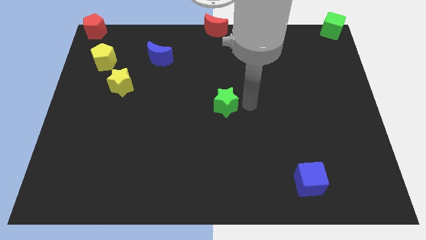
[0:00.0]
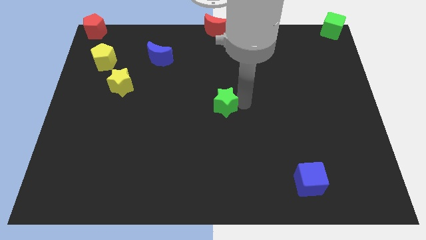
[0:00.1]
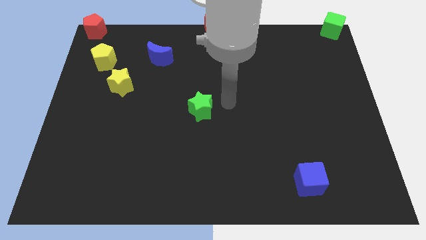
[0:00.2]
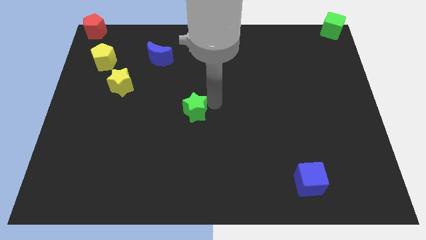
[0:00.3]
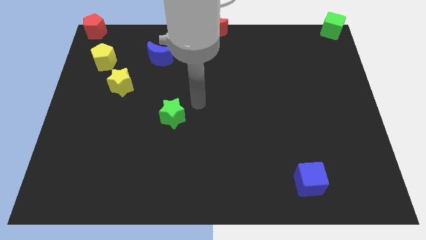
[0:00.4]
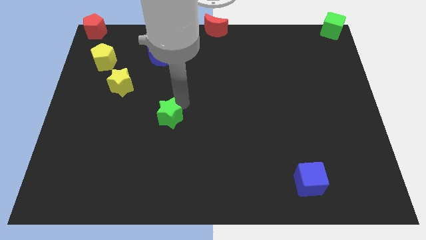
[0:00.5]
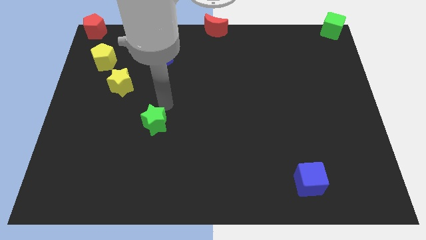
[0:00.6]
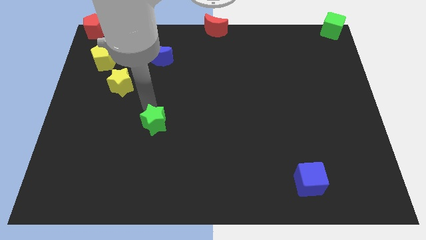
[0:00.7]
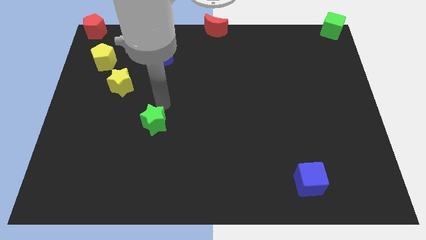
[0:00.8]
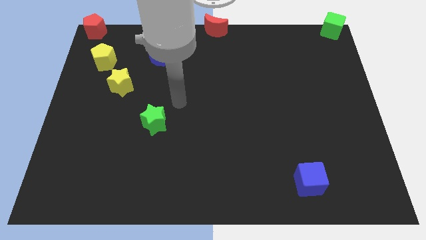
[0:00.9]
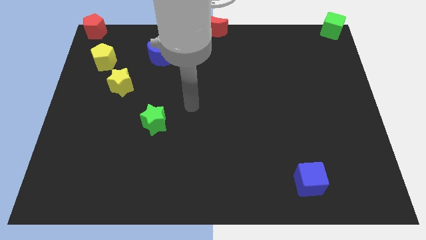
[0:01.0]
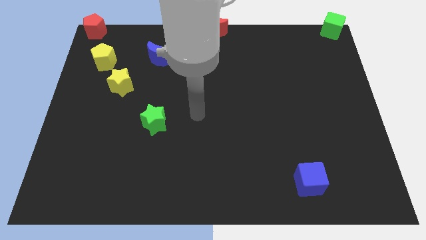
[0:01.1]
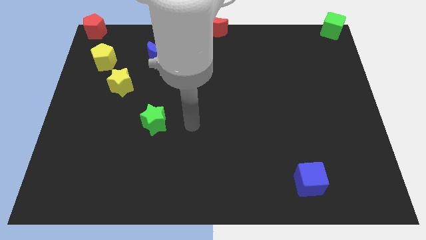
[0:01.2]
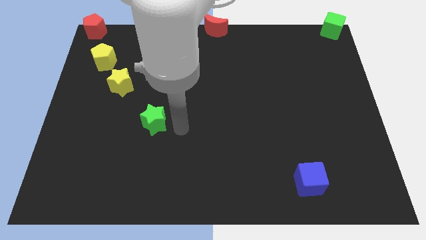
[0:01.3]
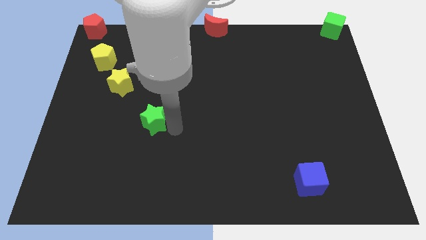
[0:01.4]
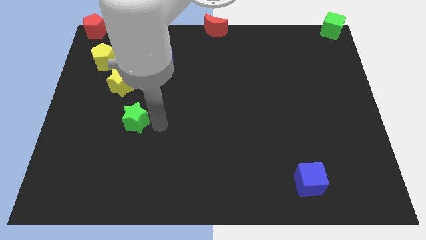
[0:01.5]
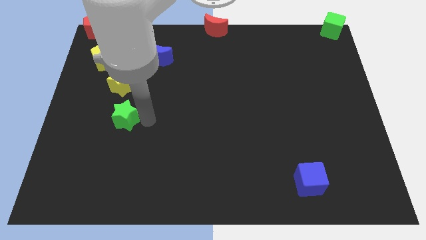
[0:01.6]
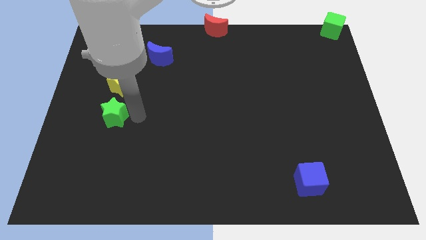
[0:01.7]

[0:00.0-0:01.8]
push the green star to the bottom of the yellow star

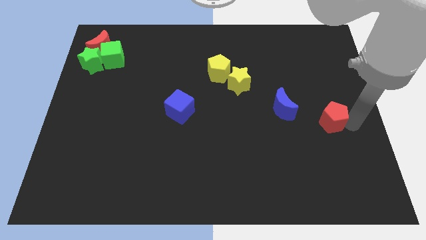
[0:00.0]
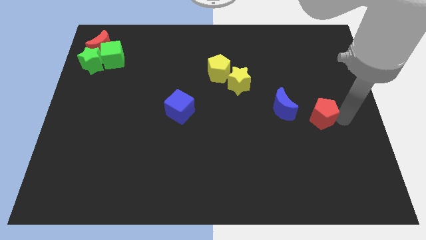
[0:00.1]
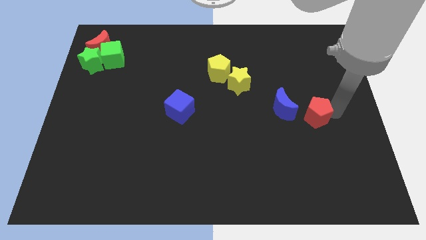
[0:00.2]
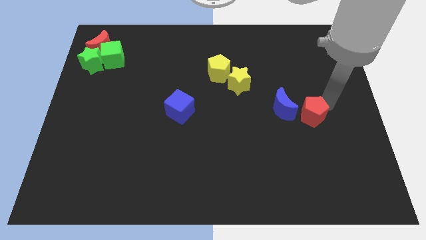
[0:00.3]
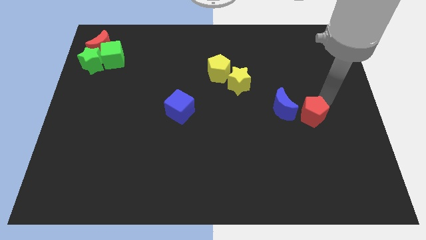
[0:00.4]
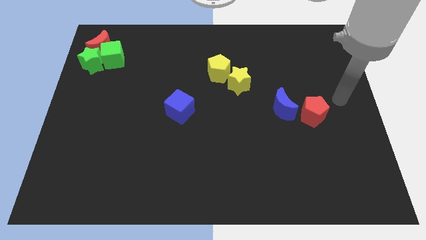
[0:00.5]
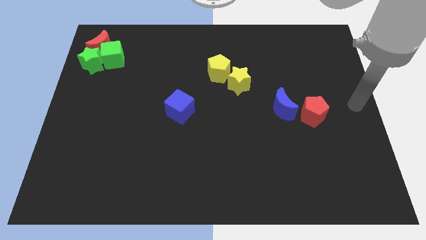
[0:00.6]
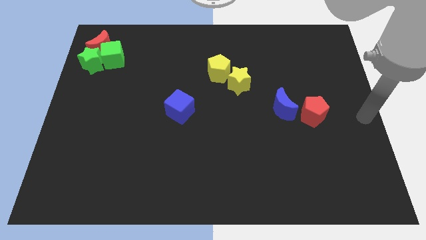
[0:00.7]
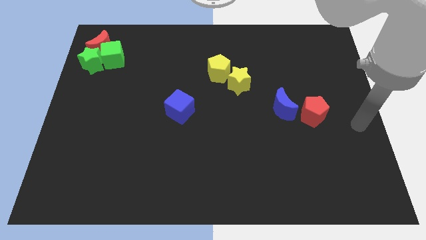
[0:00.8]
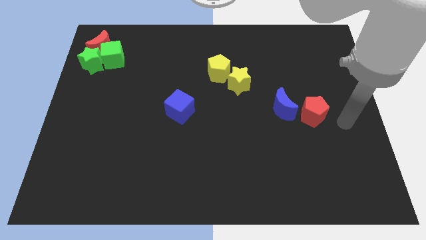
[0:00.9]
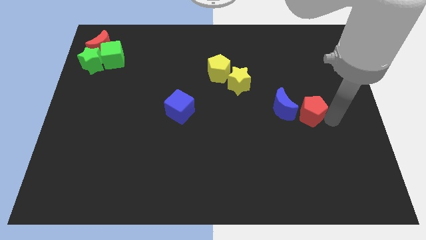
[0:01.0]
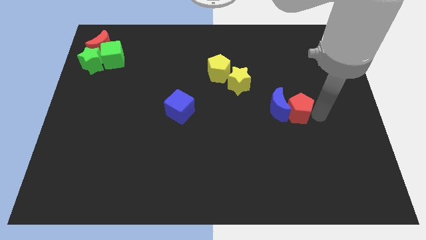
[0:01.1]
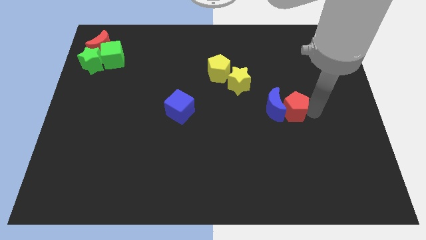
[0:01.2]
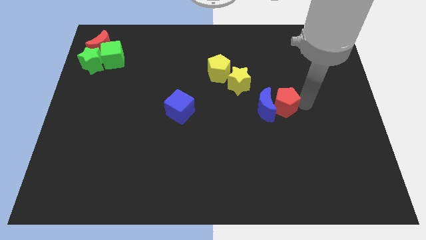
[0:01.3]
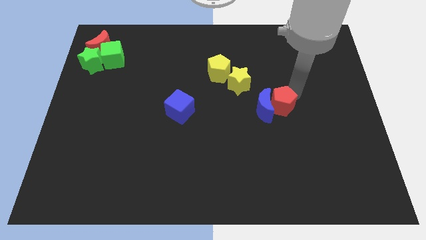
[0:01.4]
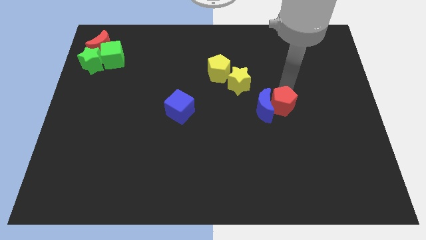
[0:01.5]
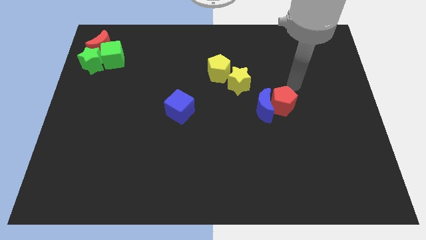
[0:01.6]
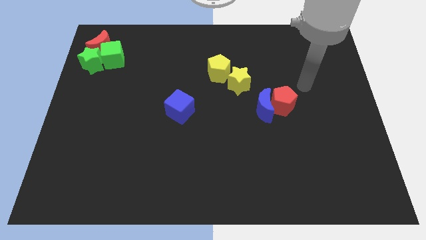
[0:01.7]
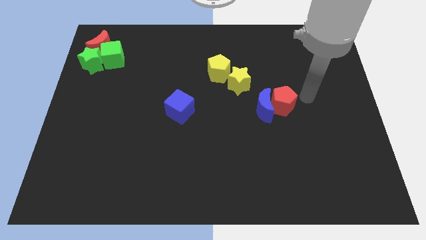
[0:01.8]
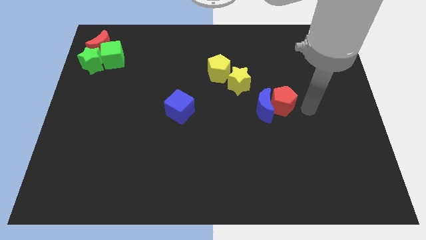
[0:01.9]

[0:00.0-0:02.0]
push red pentagon into the blue moon

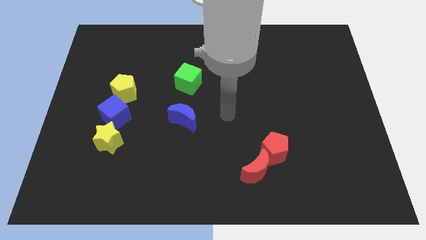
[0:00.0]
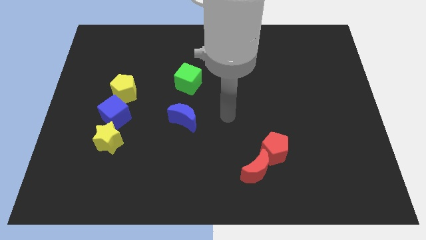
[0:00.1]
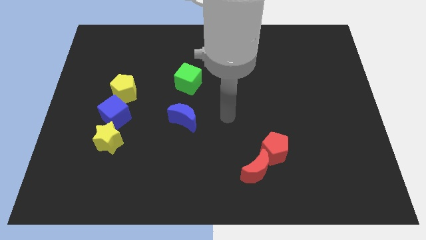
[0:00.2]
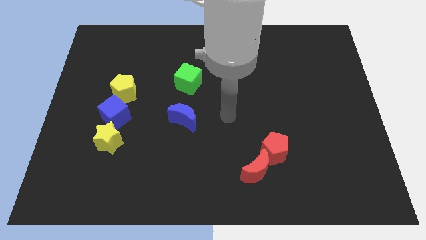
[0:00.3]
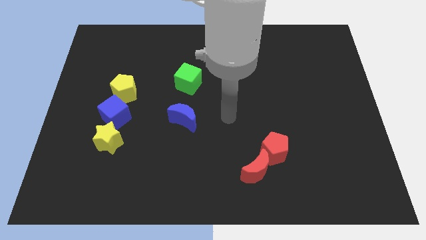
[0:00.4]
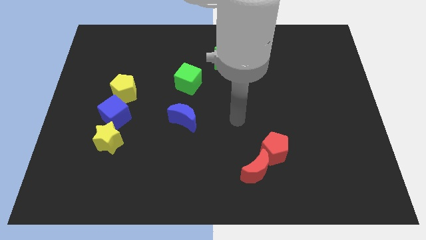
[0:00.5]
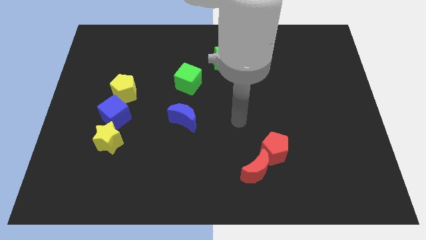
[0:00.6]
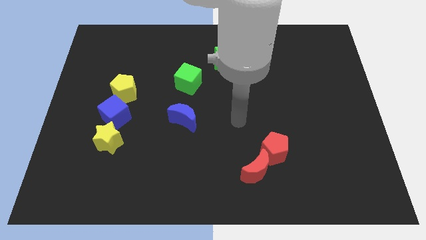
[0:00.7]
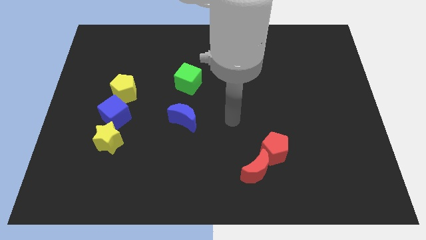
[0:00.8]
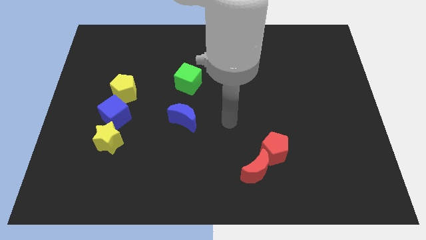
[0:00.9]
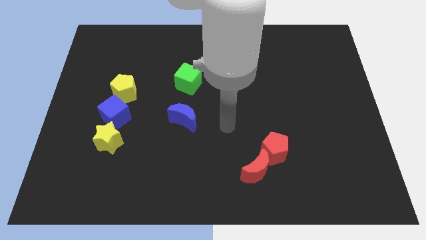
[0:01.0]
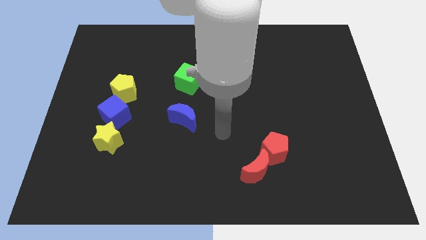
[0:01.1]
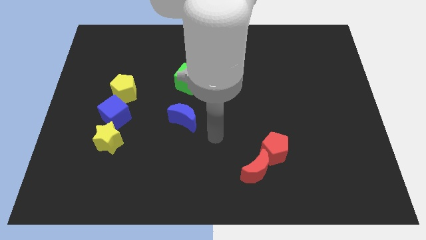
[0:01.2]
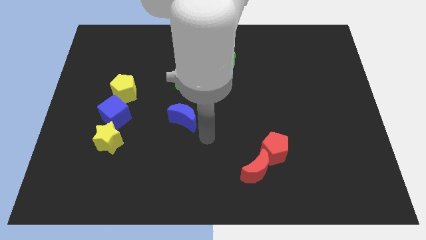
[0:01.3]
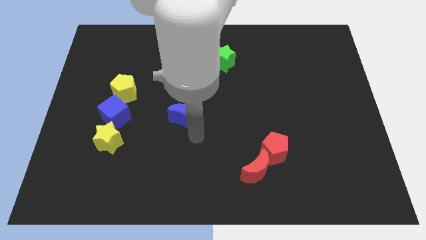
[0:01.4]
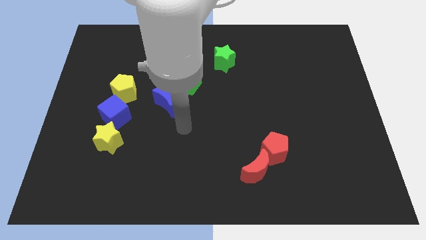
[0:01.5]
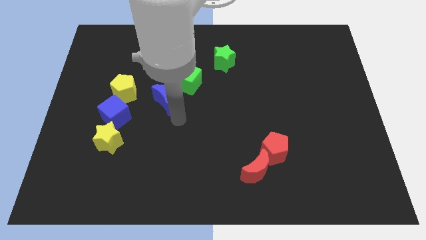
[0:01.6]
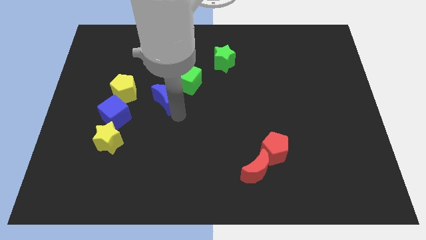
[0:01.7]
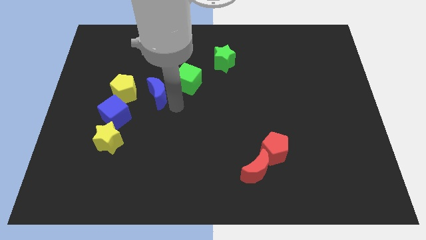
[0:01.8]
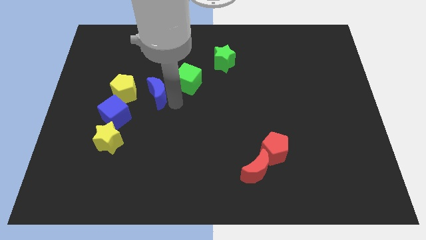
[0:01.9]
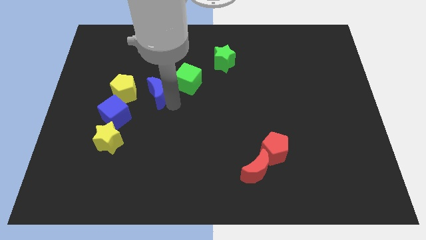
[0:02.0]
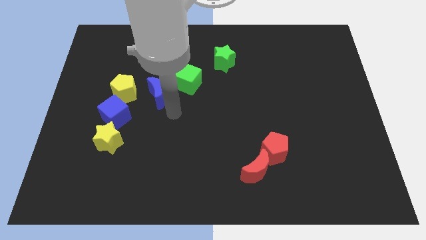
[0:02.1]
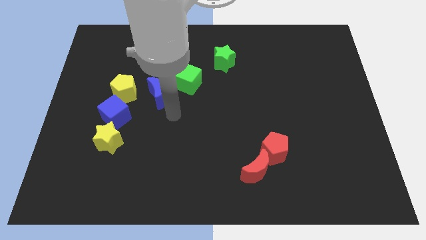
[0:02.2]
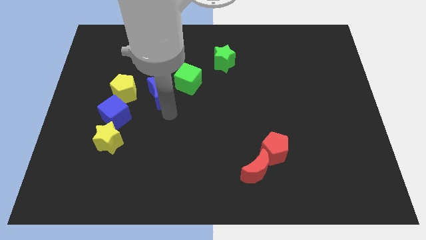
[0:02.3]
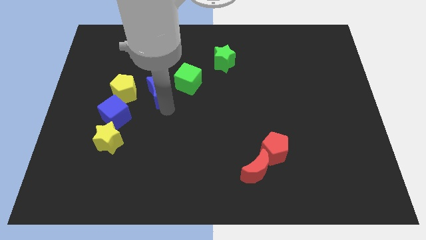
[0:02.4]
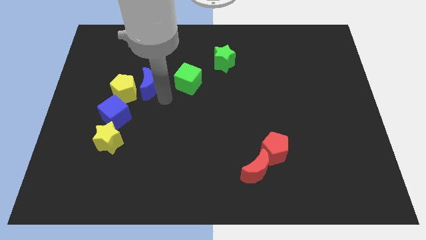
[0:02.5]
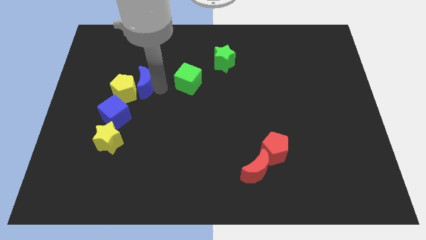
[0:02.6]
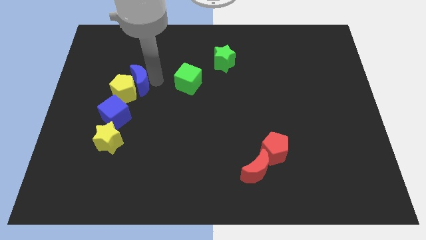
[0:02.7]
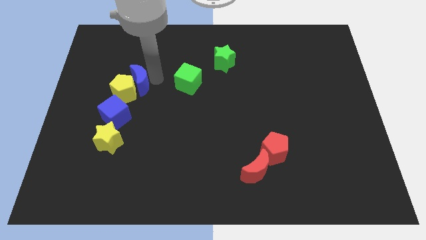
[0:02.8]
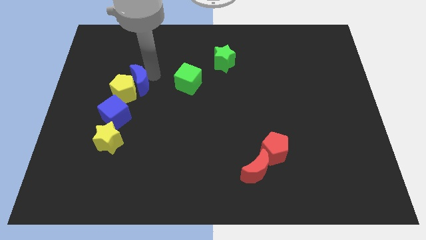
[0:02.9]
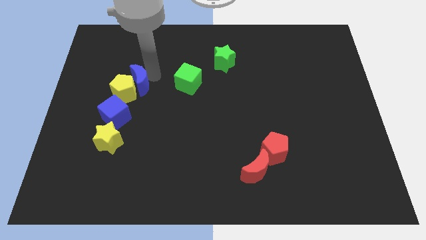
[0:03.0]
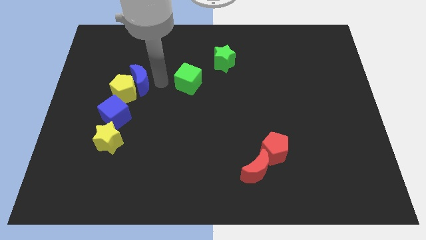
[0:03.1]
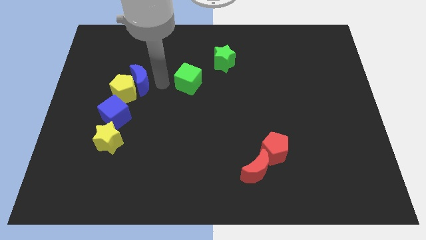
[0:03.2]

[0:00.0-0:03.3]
place the blue moon to the right of the yellow pentagon

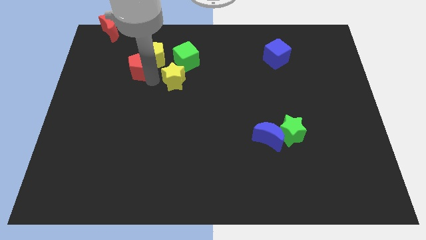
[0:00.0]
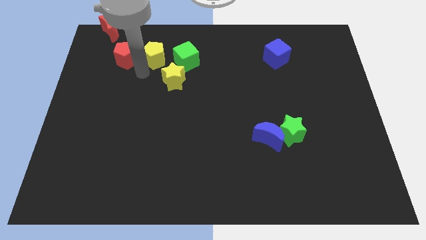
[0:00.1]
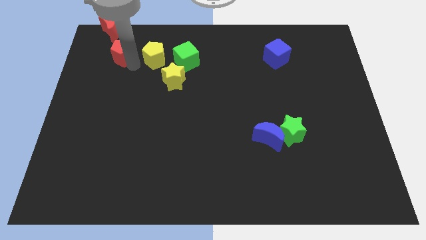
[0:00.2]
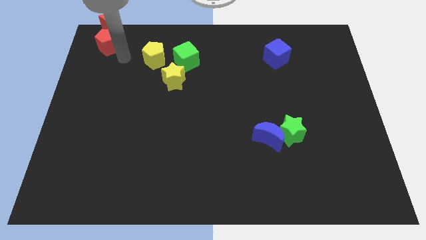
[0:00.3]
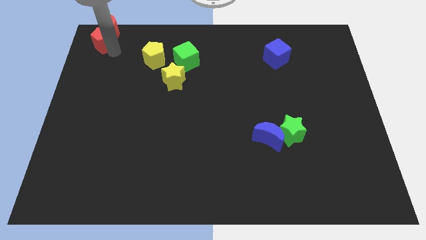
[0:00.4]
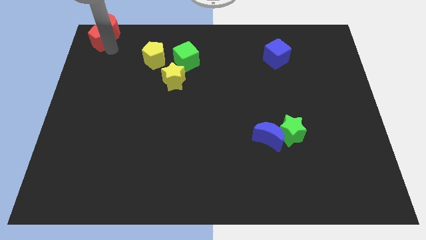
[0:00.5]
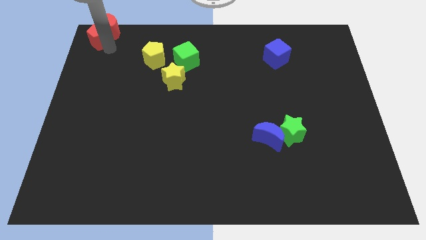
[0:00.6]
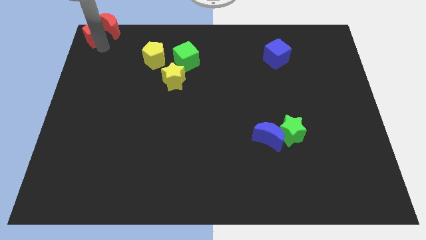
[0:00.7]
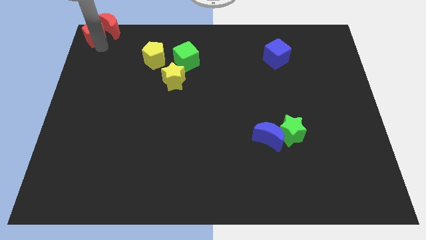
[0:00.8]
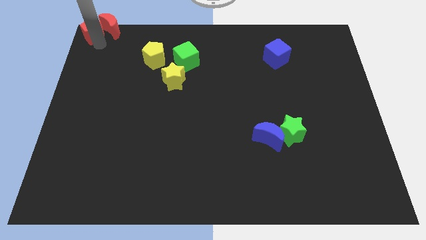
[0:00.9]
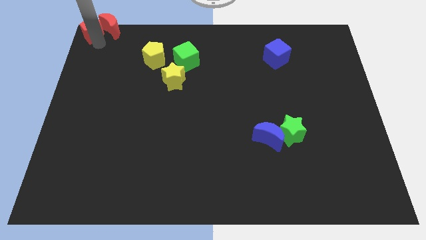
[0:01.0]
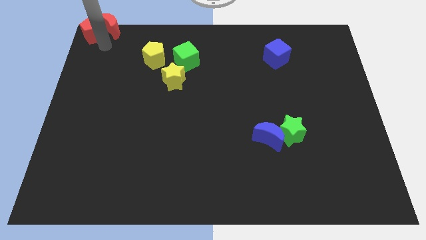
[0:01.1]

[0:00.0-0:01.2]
push the red pentagon into the red moon

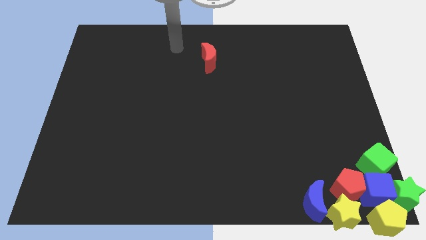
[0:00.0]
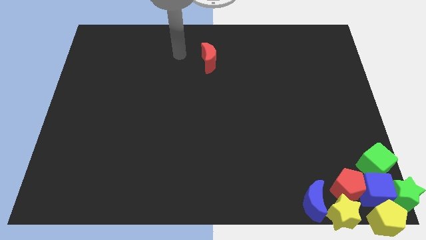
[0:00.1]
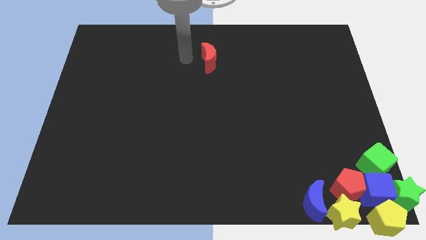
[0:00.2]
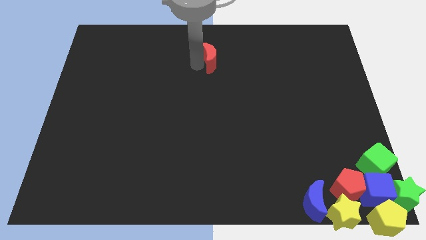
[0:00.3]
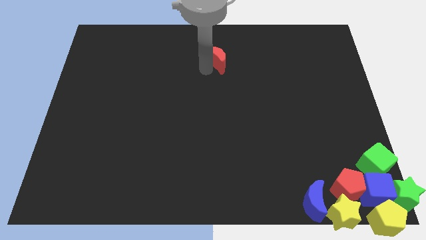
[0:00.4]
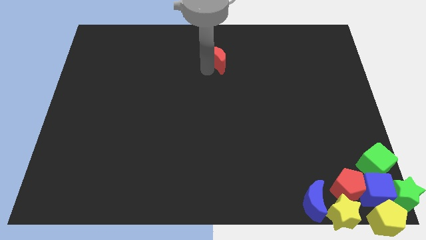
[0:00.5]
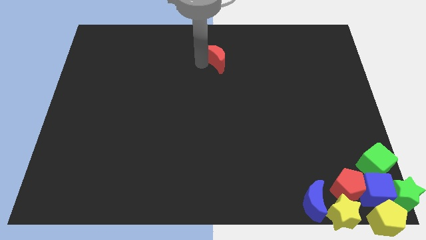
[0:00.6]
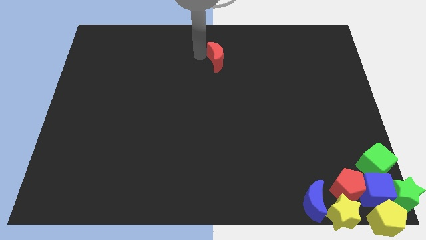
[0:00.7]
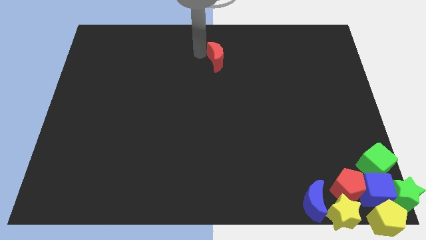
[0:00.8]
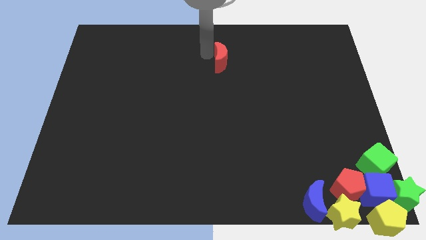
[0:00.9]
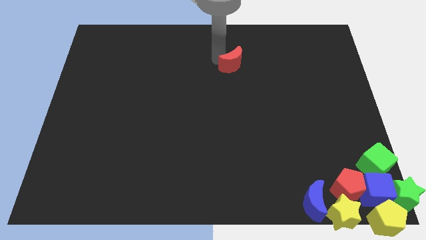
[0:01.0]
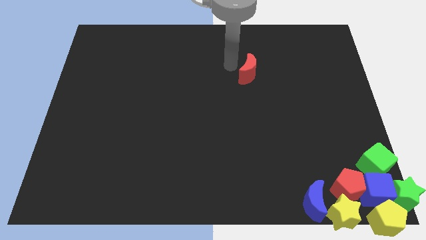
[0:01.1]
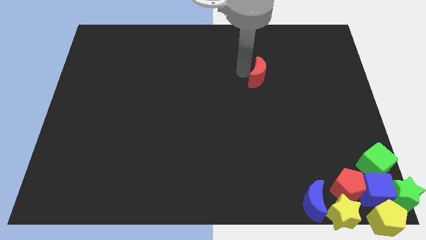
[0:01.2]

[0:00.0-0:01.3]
move the red crescent towards the bottom of the board
